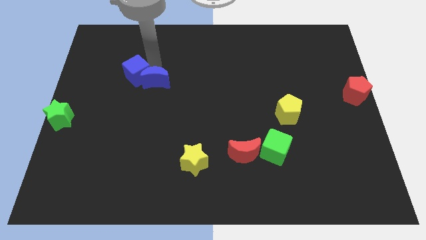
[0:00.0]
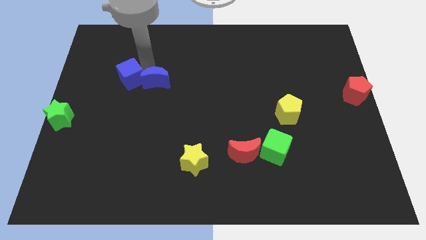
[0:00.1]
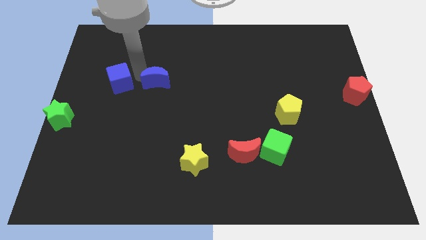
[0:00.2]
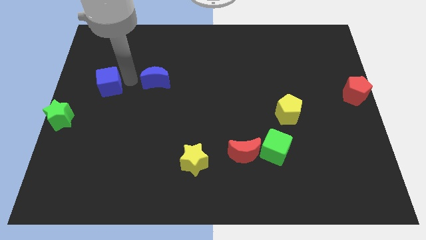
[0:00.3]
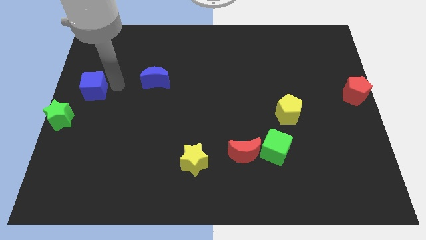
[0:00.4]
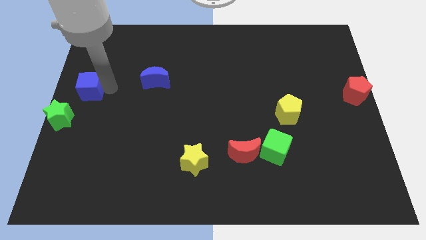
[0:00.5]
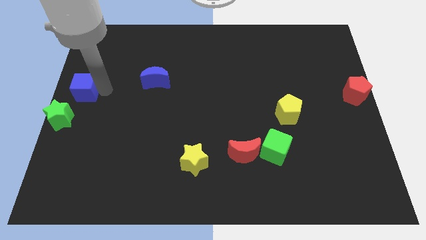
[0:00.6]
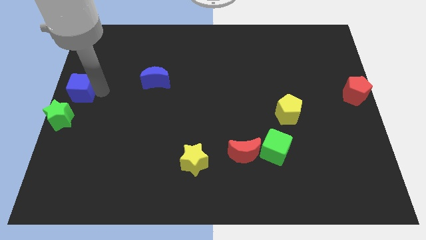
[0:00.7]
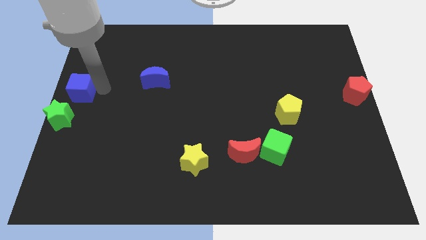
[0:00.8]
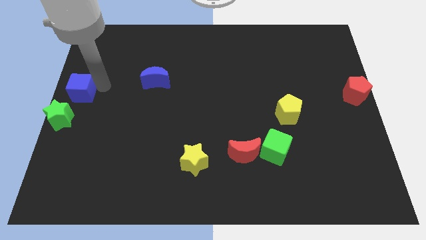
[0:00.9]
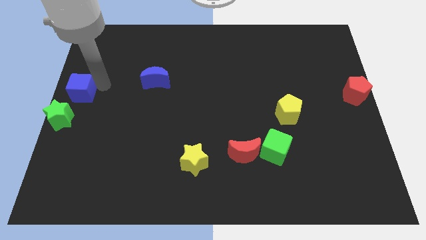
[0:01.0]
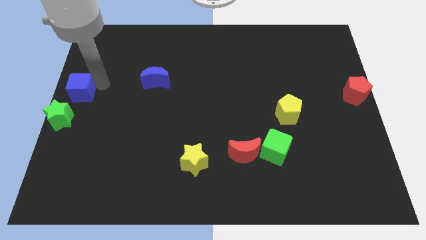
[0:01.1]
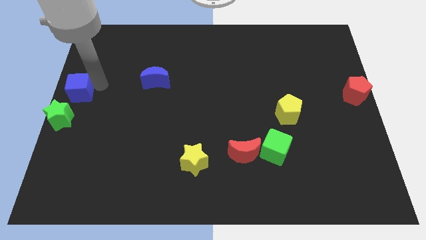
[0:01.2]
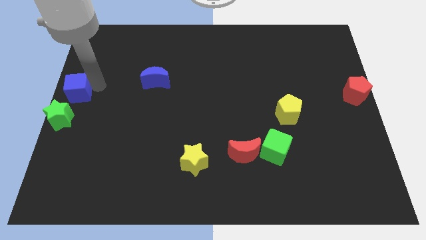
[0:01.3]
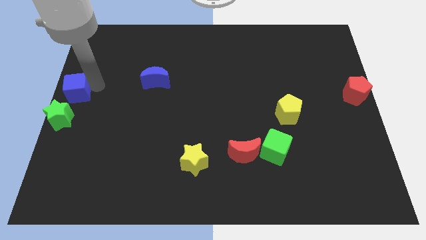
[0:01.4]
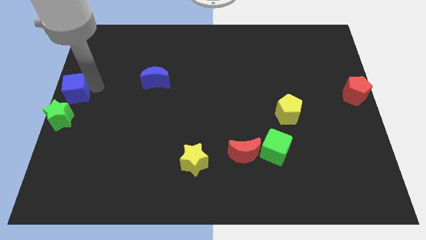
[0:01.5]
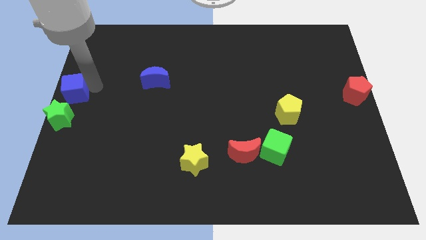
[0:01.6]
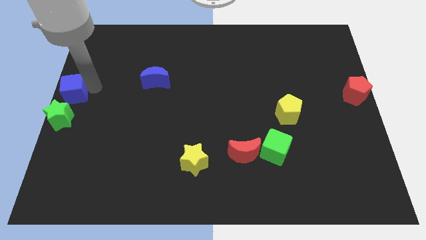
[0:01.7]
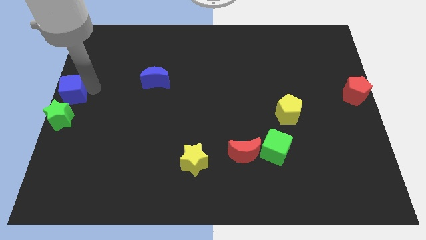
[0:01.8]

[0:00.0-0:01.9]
move the blue cube to the top of the green star

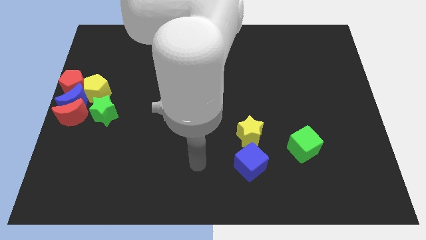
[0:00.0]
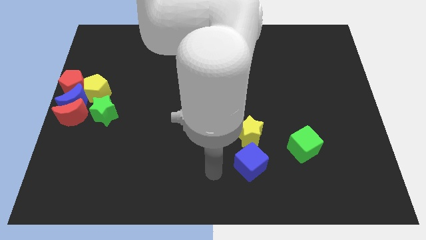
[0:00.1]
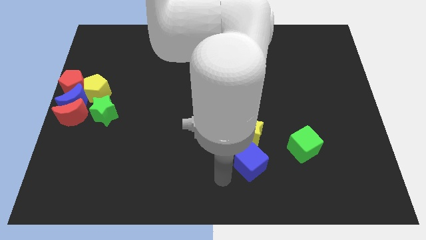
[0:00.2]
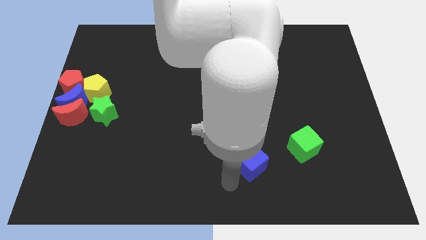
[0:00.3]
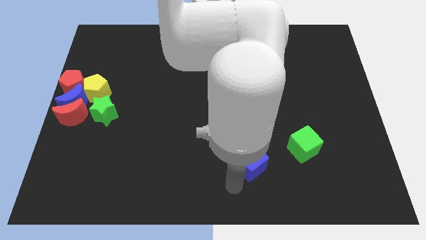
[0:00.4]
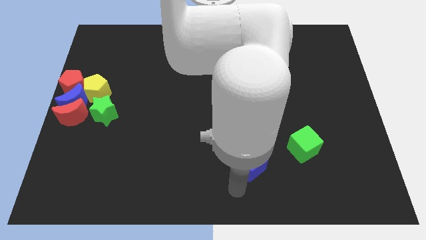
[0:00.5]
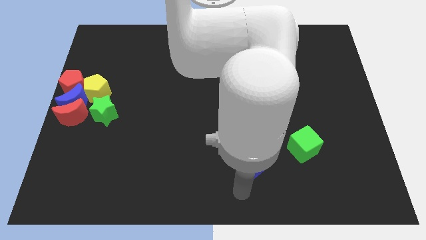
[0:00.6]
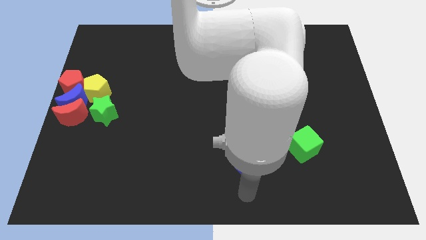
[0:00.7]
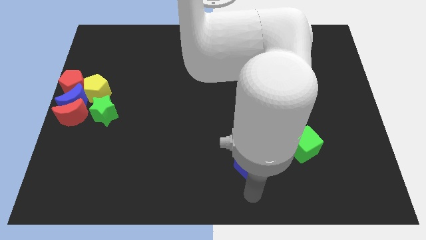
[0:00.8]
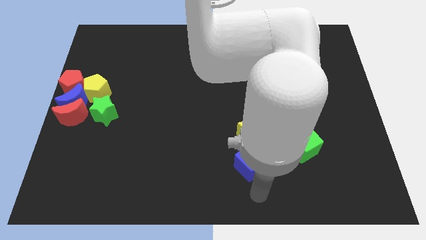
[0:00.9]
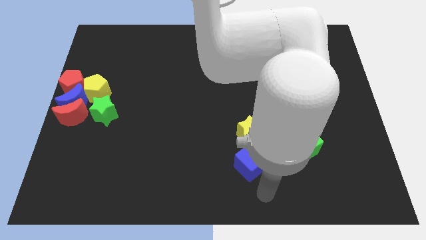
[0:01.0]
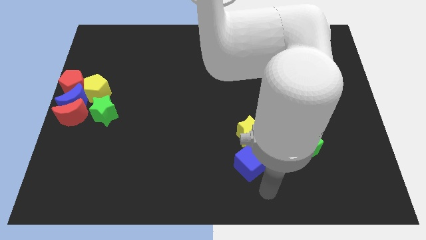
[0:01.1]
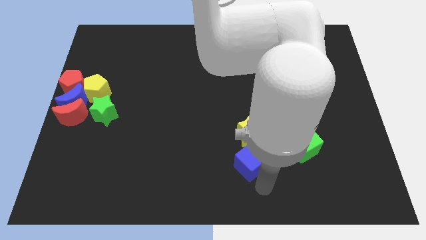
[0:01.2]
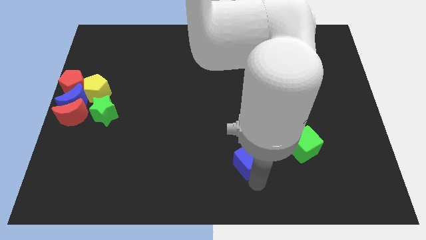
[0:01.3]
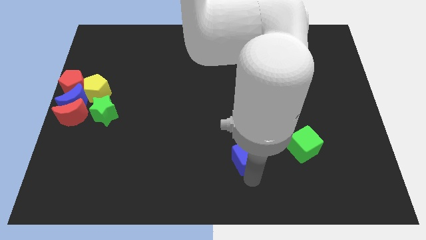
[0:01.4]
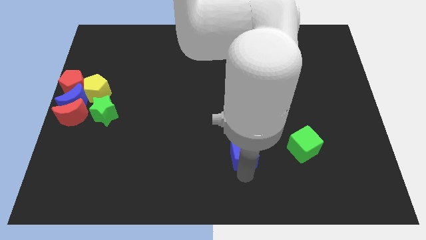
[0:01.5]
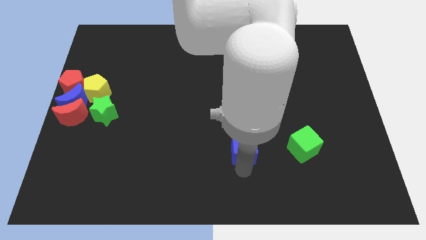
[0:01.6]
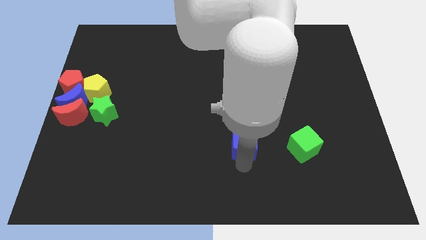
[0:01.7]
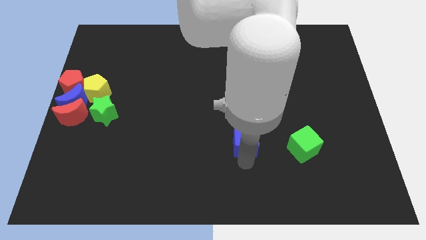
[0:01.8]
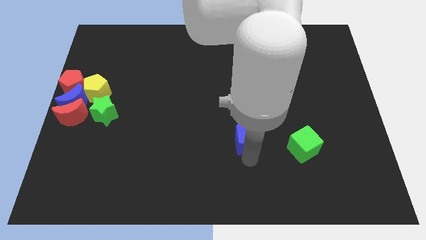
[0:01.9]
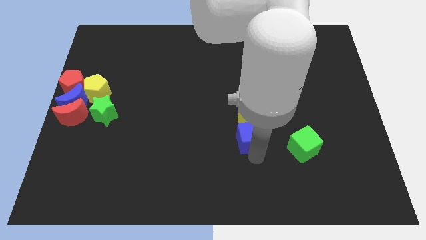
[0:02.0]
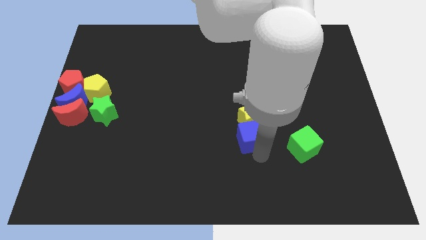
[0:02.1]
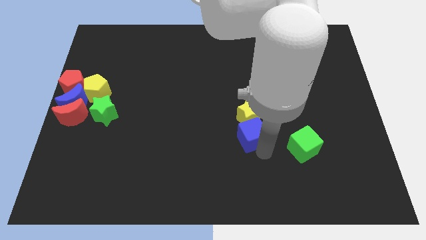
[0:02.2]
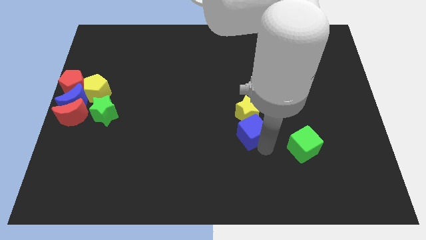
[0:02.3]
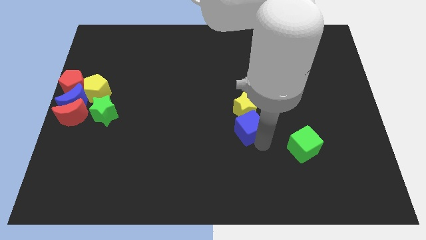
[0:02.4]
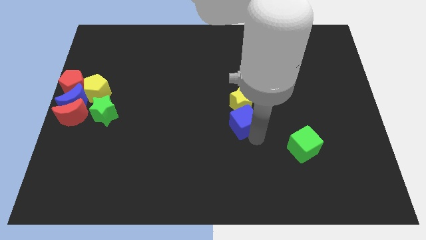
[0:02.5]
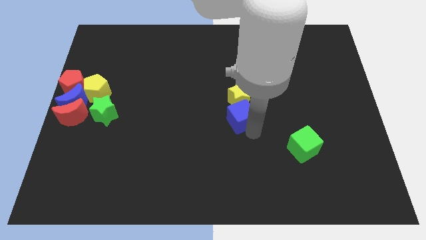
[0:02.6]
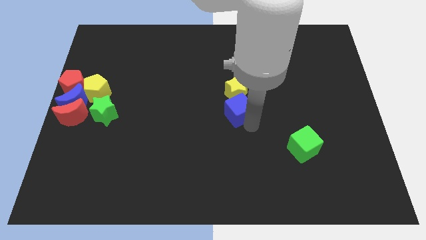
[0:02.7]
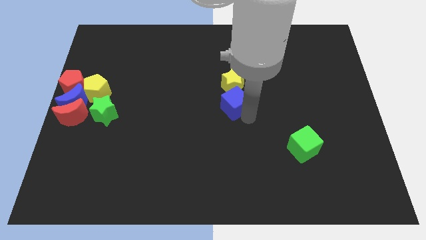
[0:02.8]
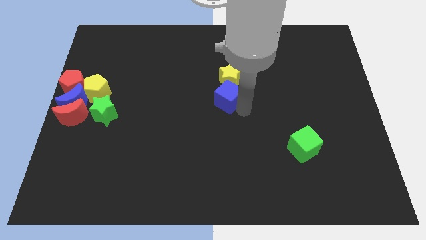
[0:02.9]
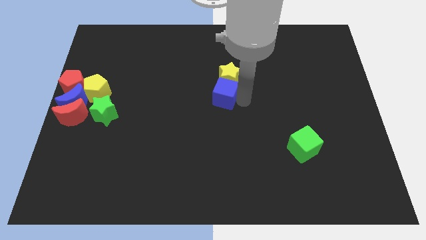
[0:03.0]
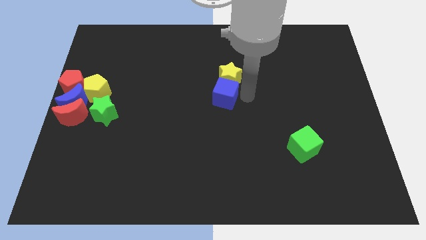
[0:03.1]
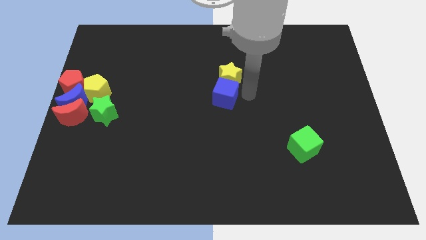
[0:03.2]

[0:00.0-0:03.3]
slide the blue cube along with the yellow star towards the top side of the board

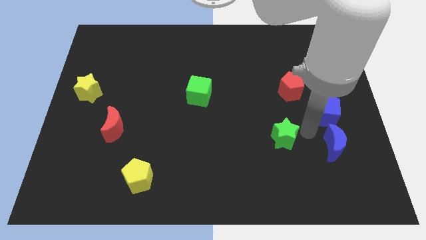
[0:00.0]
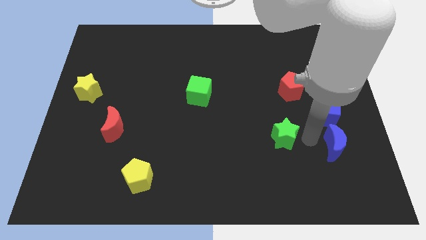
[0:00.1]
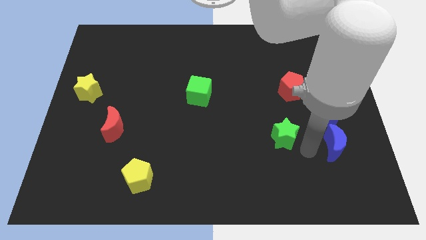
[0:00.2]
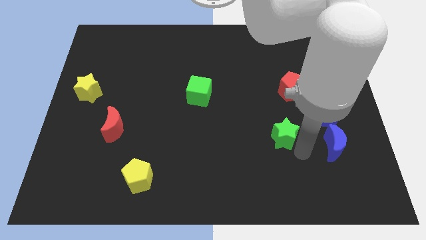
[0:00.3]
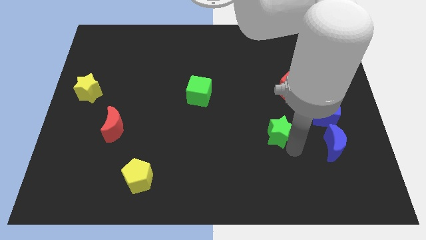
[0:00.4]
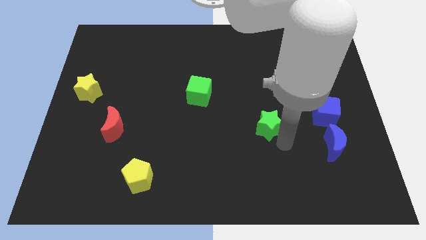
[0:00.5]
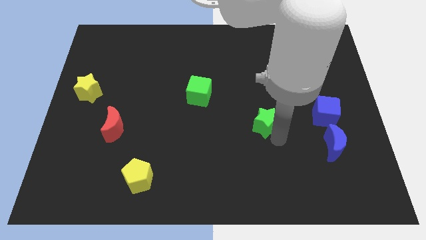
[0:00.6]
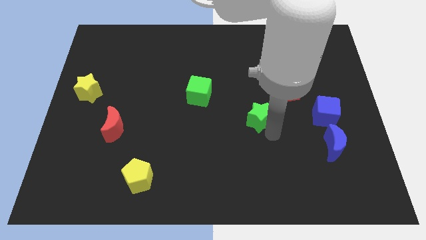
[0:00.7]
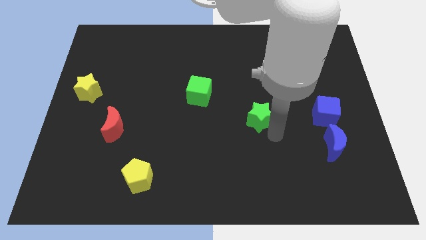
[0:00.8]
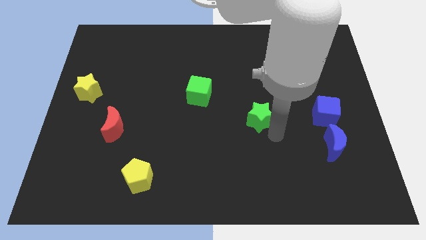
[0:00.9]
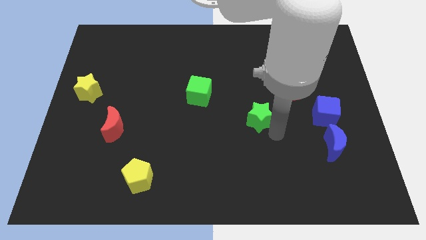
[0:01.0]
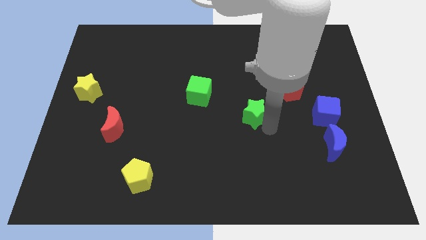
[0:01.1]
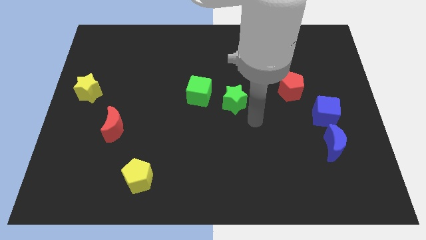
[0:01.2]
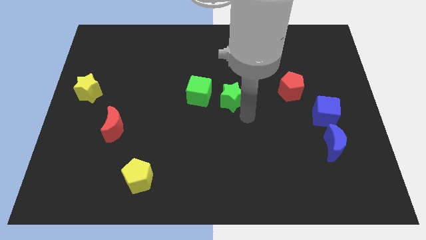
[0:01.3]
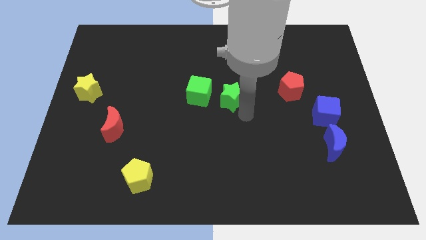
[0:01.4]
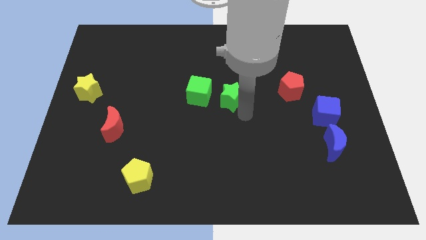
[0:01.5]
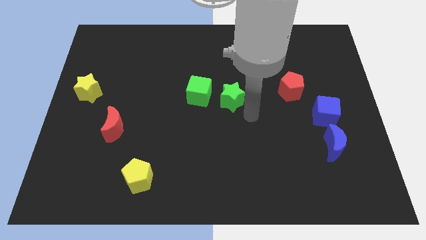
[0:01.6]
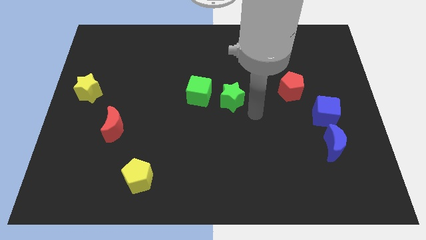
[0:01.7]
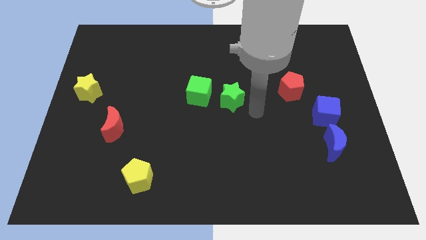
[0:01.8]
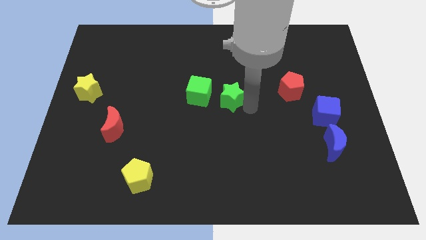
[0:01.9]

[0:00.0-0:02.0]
move the green star to the right of the green cube

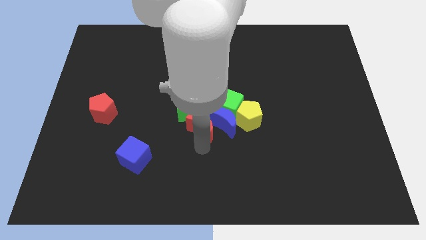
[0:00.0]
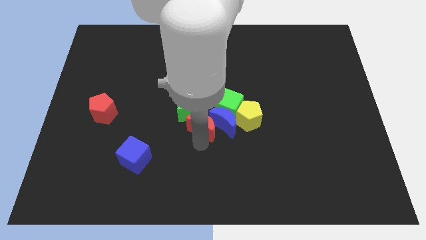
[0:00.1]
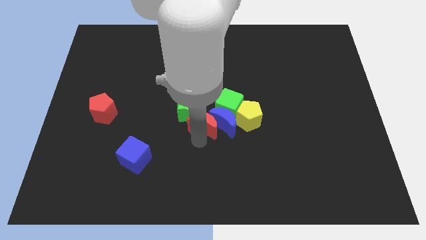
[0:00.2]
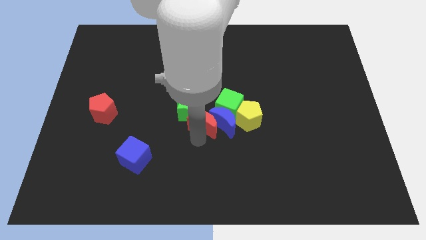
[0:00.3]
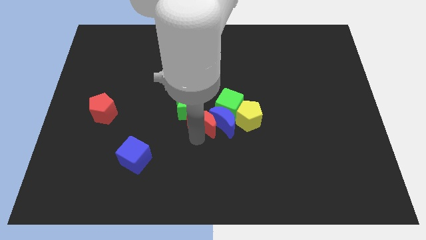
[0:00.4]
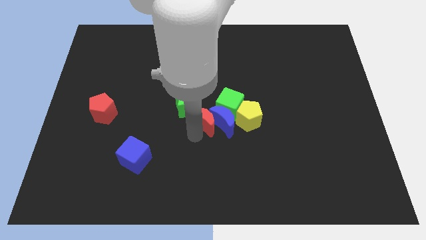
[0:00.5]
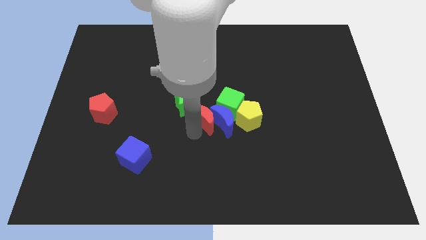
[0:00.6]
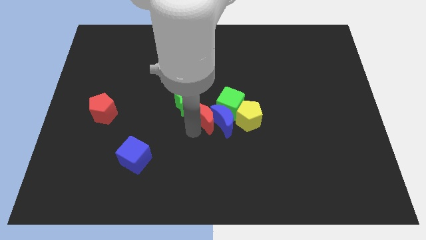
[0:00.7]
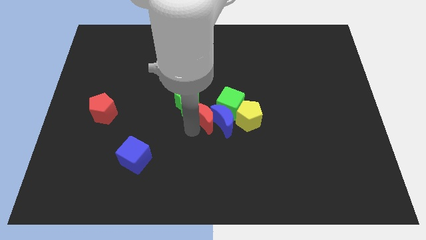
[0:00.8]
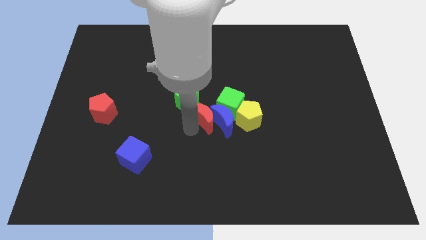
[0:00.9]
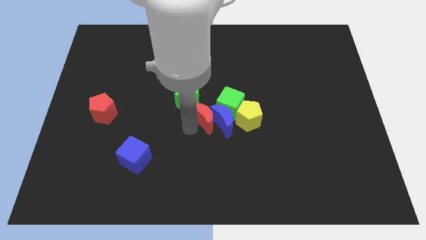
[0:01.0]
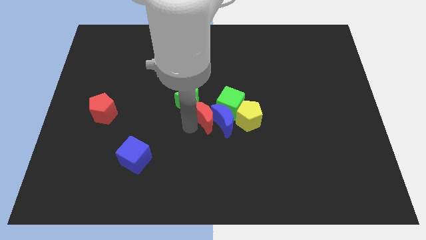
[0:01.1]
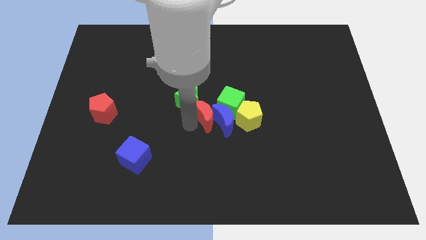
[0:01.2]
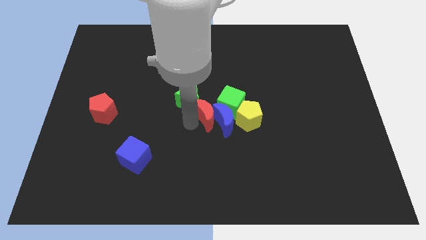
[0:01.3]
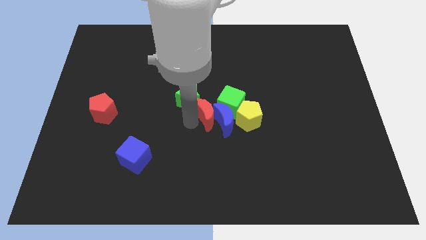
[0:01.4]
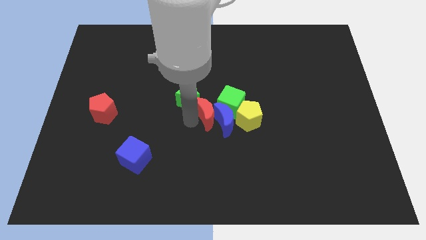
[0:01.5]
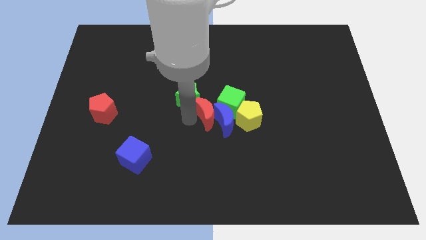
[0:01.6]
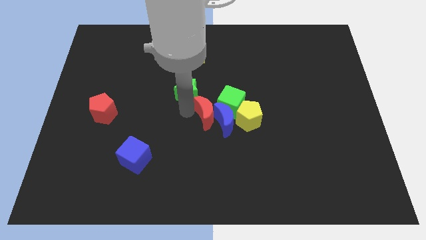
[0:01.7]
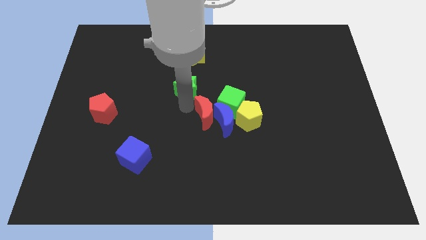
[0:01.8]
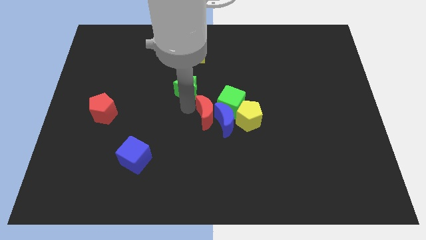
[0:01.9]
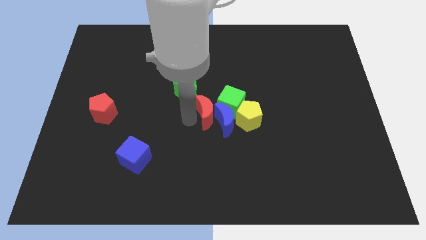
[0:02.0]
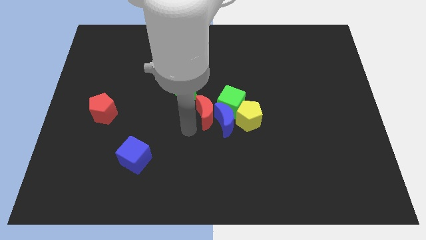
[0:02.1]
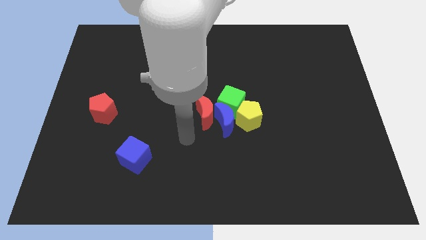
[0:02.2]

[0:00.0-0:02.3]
move the red crescent to the center of the board
